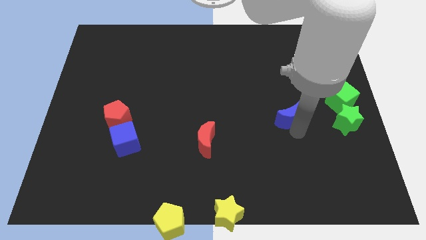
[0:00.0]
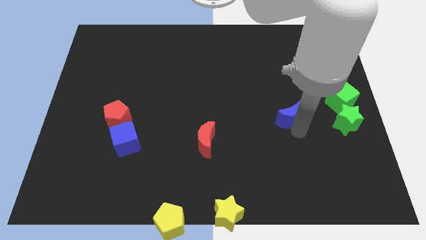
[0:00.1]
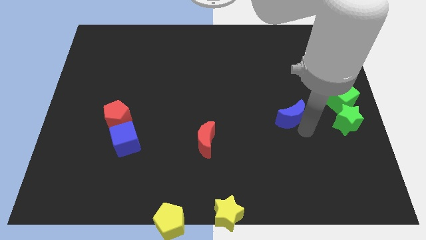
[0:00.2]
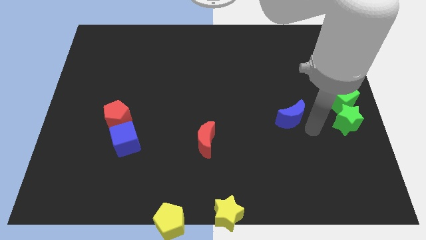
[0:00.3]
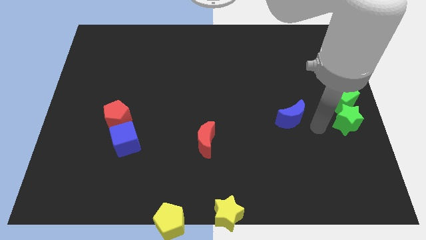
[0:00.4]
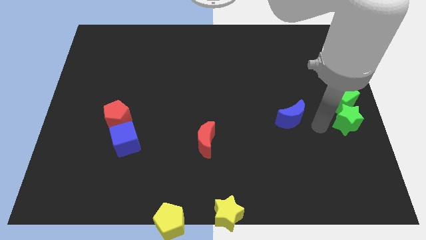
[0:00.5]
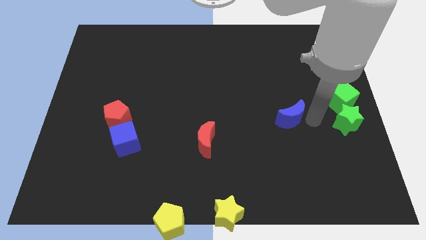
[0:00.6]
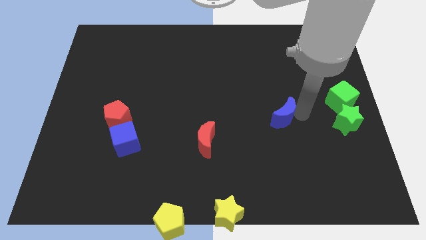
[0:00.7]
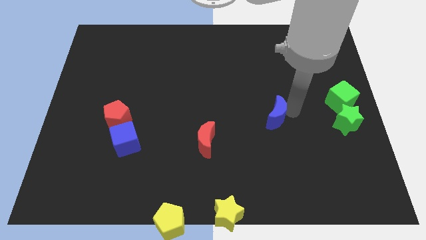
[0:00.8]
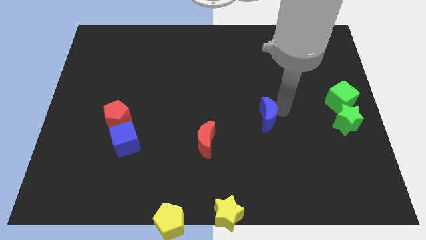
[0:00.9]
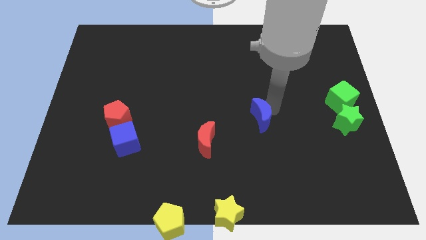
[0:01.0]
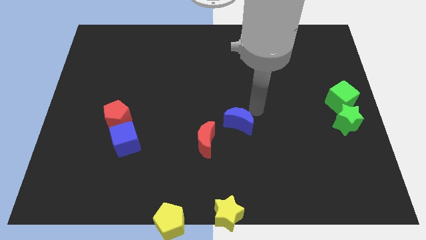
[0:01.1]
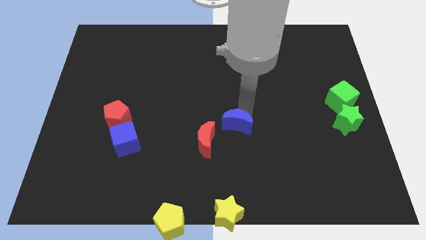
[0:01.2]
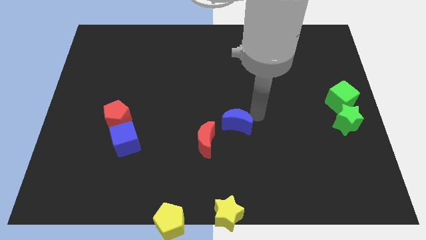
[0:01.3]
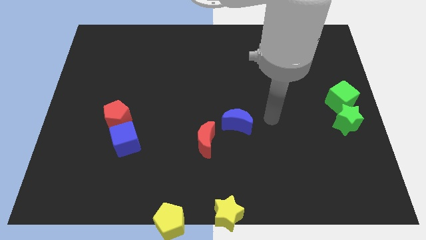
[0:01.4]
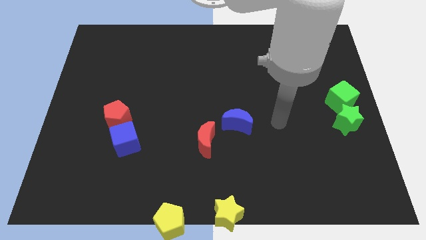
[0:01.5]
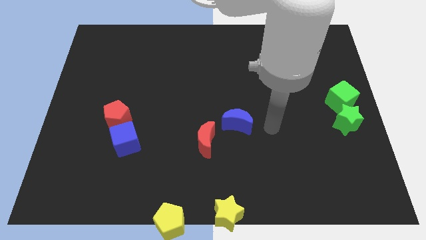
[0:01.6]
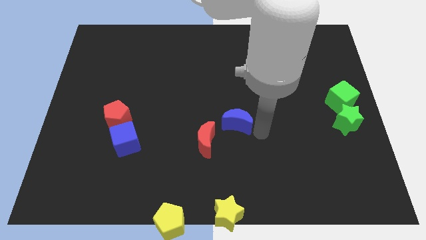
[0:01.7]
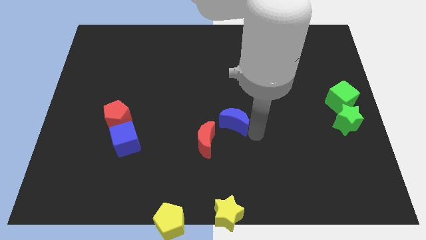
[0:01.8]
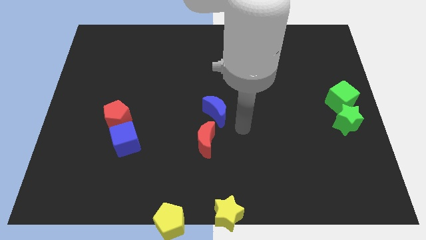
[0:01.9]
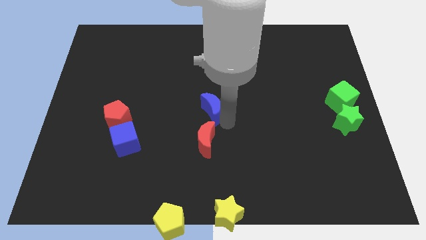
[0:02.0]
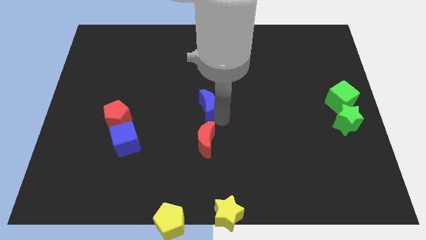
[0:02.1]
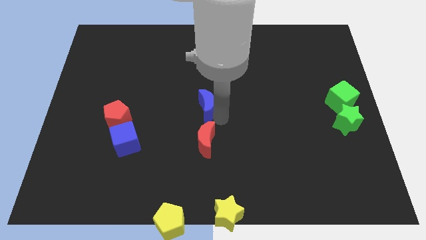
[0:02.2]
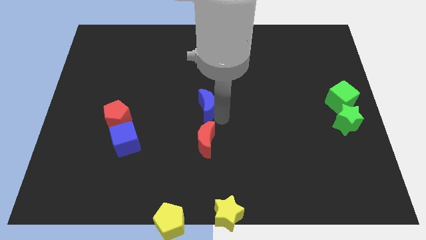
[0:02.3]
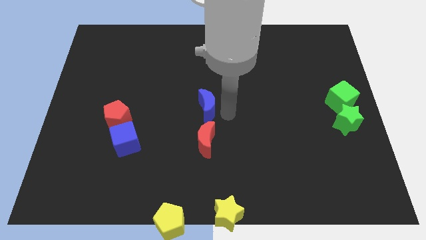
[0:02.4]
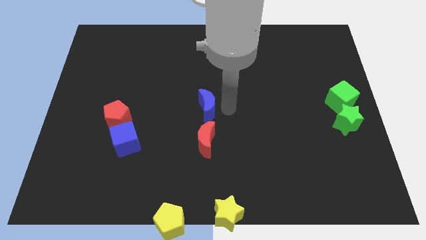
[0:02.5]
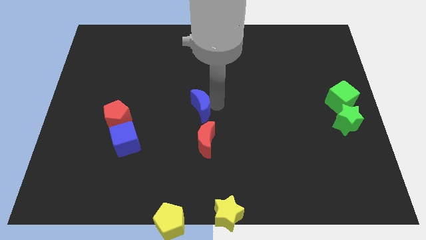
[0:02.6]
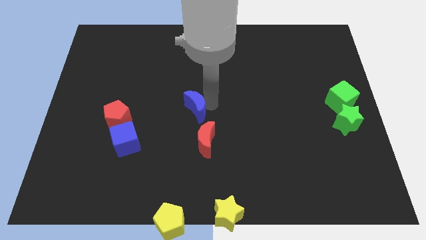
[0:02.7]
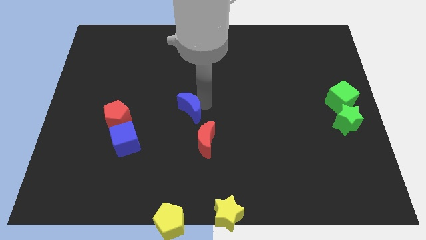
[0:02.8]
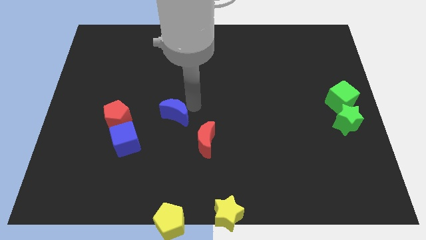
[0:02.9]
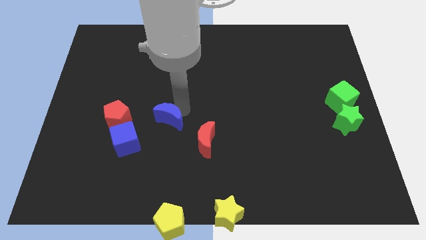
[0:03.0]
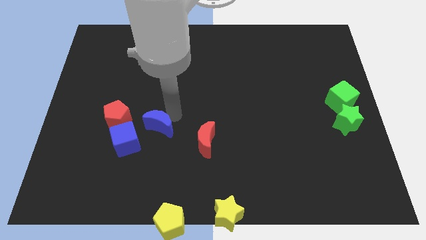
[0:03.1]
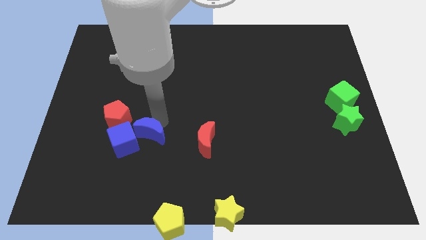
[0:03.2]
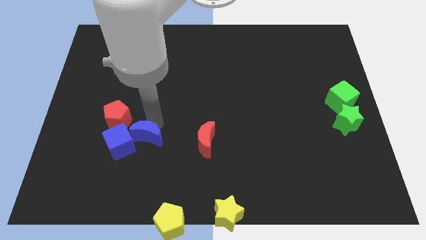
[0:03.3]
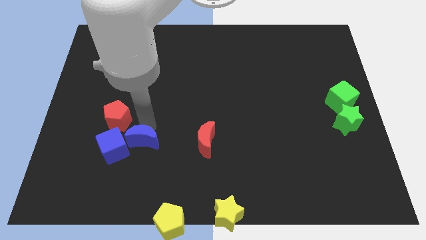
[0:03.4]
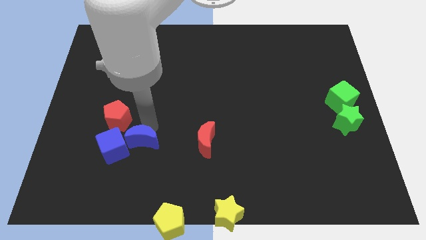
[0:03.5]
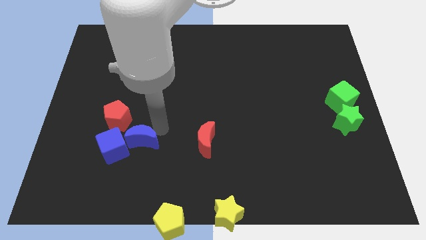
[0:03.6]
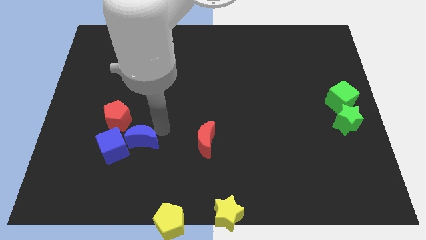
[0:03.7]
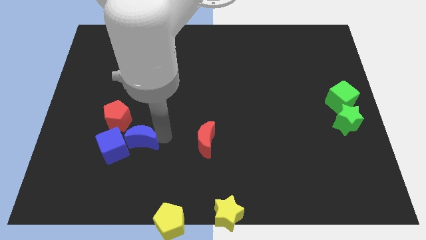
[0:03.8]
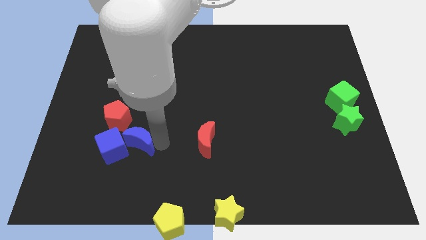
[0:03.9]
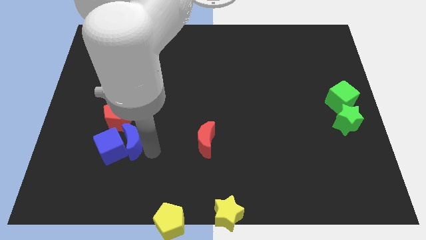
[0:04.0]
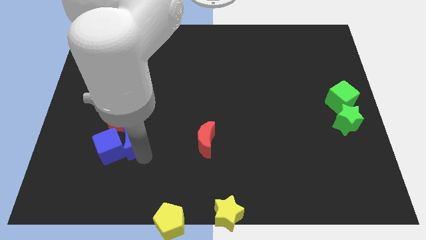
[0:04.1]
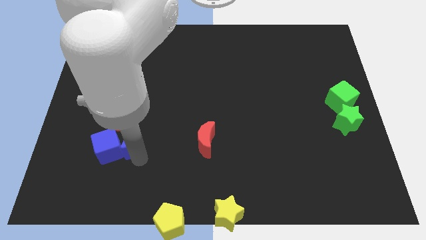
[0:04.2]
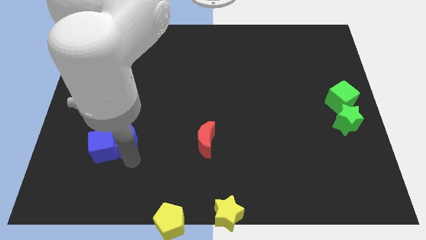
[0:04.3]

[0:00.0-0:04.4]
push the blue crescent into the blue cube

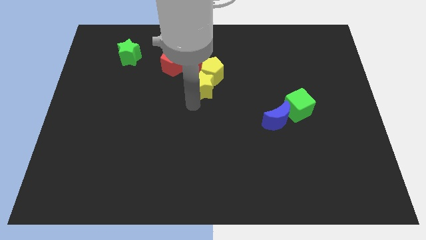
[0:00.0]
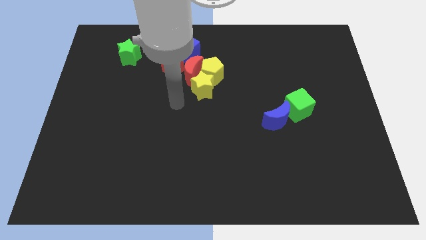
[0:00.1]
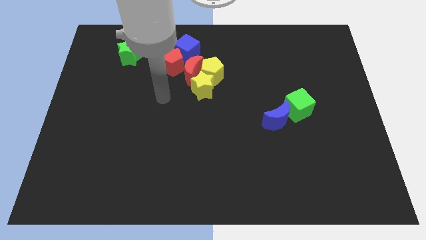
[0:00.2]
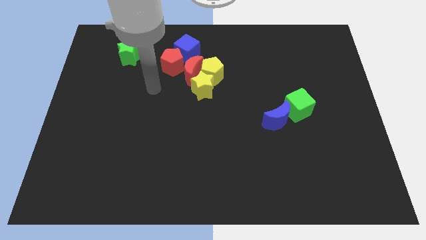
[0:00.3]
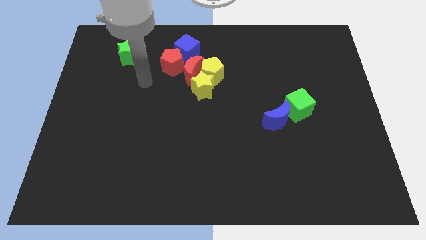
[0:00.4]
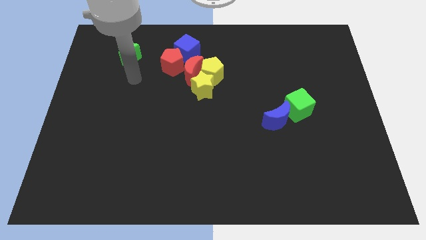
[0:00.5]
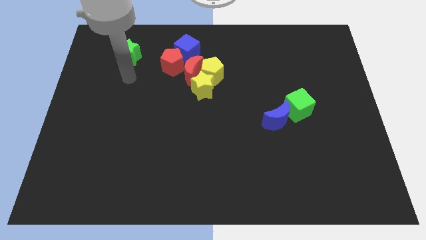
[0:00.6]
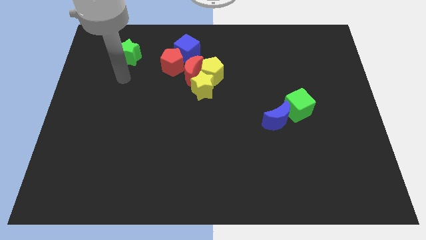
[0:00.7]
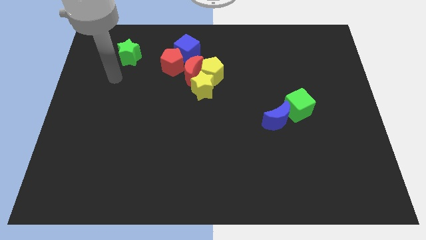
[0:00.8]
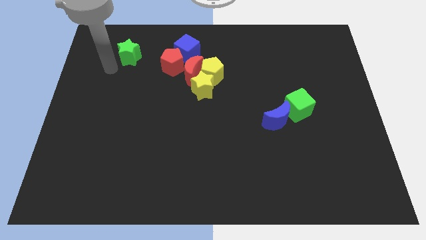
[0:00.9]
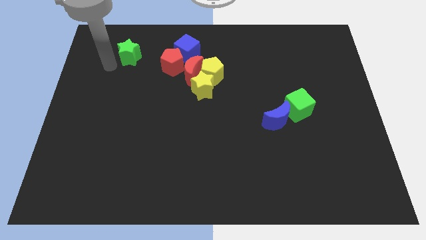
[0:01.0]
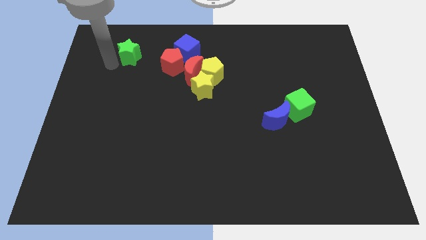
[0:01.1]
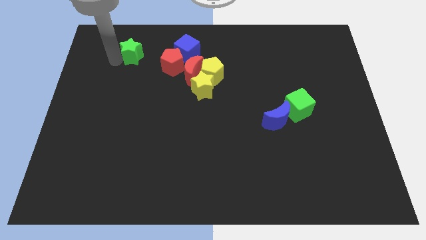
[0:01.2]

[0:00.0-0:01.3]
touch the left side of the green star

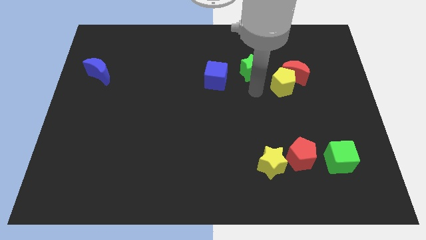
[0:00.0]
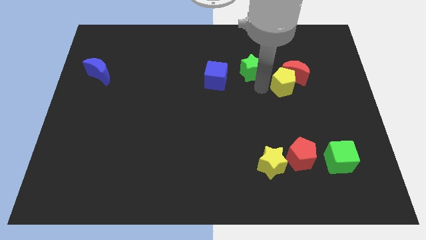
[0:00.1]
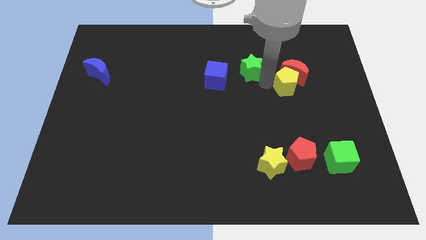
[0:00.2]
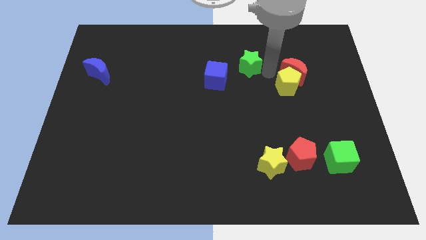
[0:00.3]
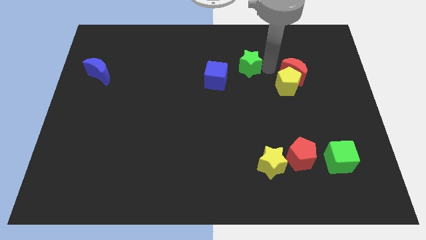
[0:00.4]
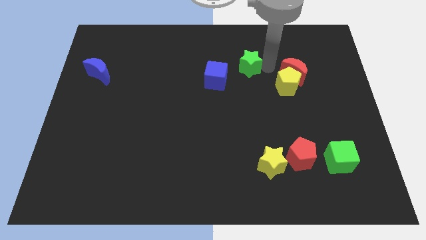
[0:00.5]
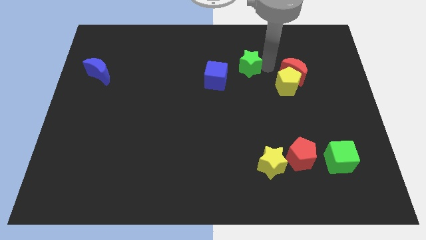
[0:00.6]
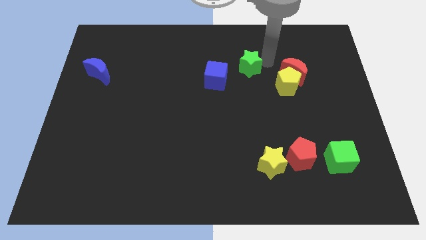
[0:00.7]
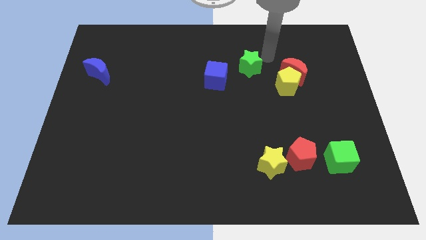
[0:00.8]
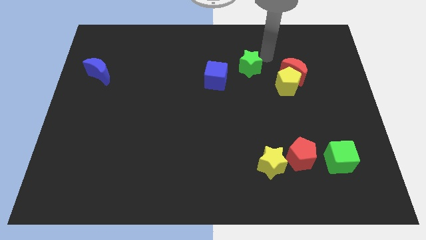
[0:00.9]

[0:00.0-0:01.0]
move the yellow pentagon slightly

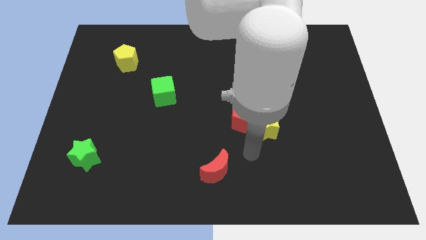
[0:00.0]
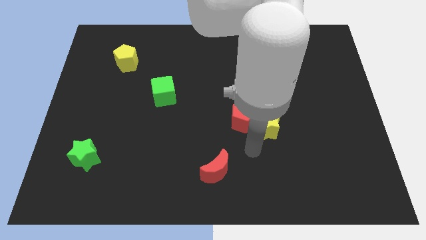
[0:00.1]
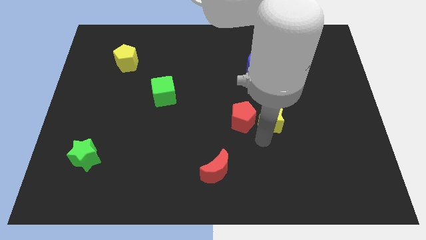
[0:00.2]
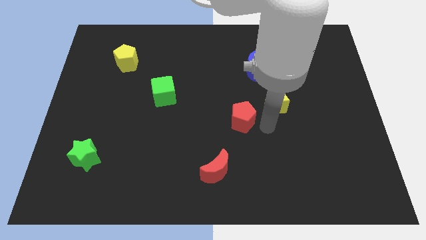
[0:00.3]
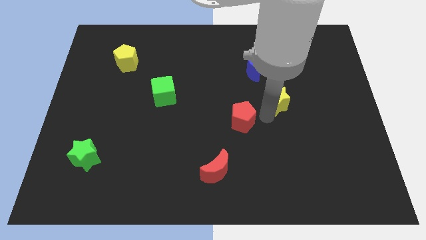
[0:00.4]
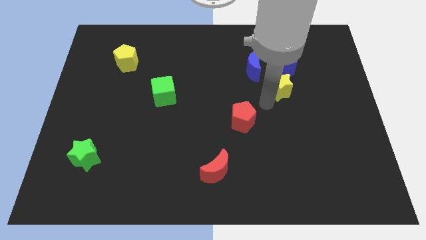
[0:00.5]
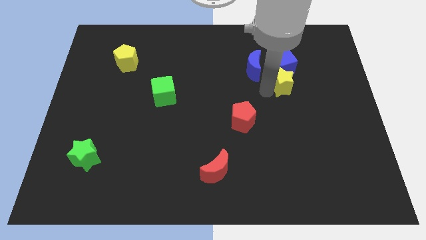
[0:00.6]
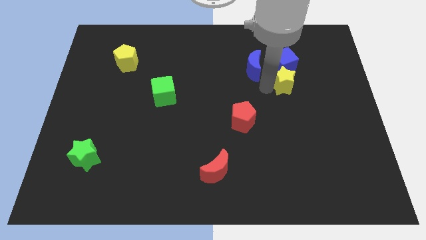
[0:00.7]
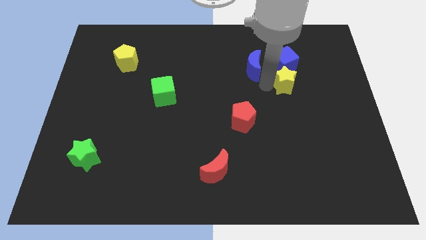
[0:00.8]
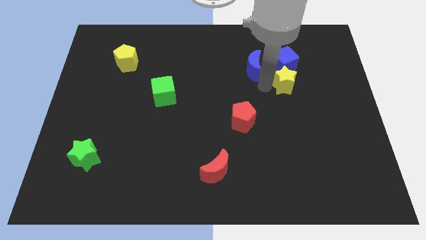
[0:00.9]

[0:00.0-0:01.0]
push yellow star into the blue cube and blue moon

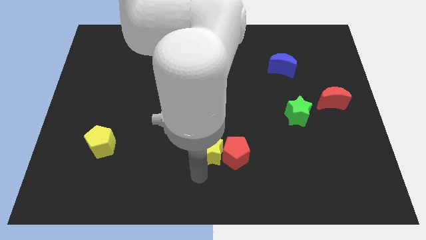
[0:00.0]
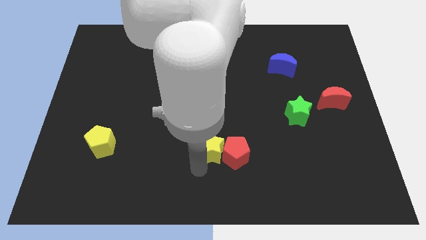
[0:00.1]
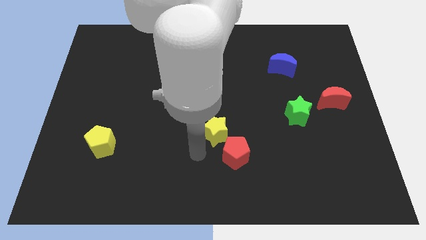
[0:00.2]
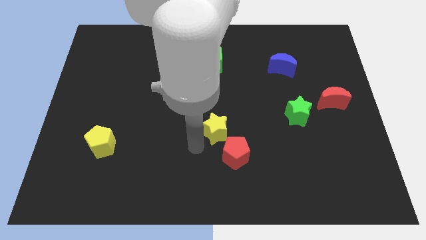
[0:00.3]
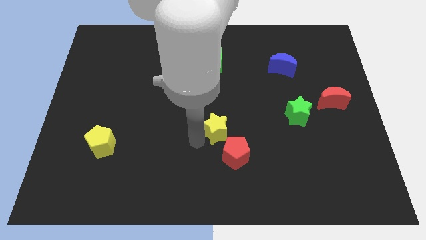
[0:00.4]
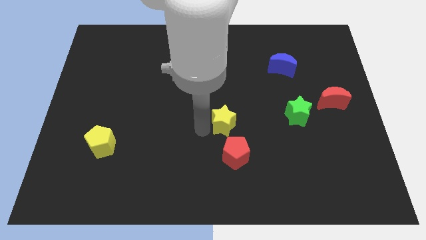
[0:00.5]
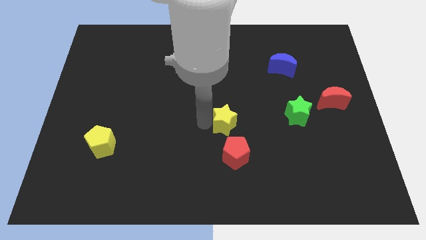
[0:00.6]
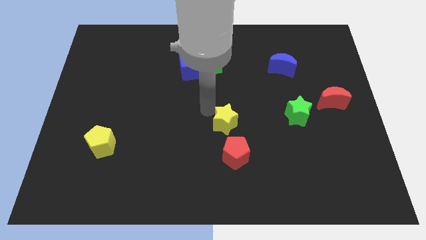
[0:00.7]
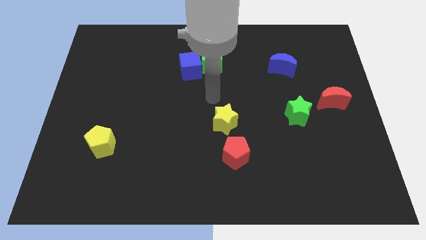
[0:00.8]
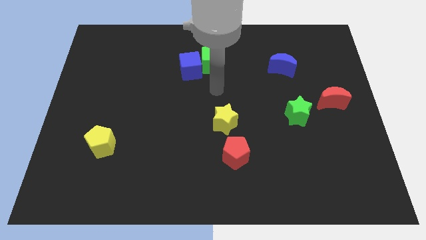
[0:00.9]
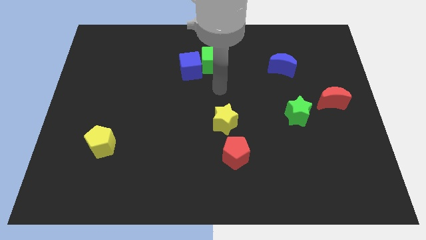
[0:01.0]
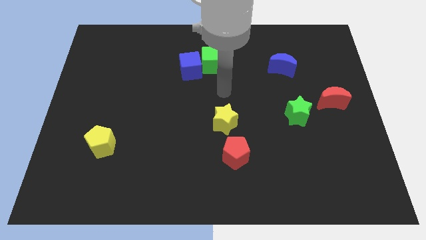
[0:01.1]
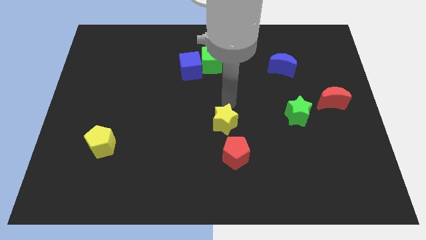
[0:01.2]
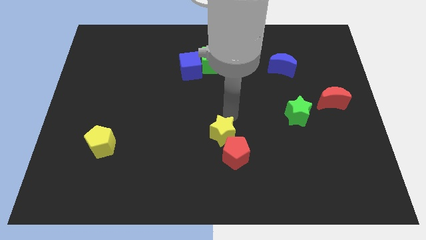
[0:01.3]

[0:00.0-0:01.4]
place the yellow star above the red pentagon
